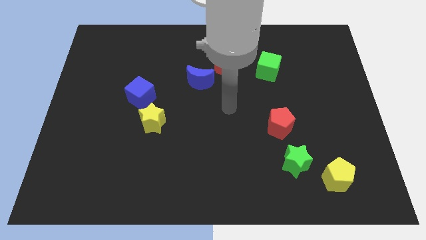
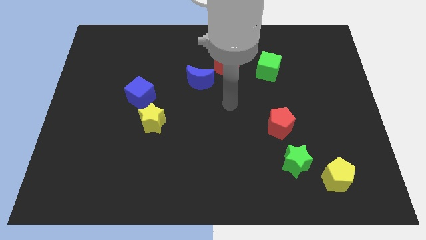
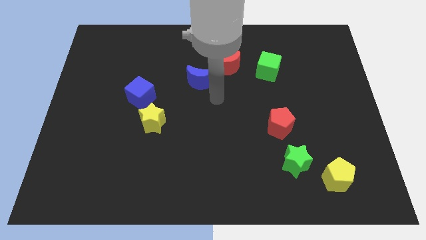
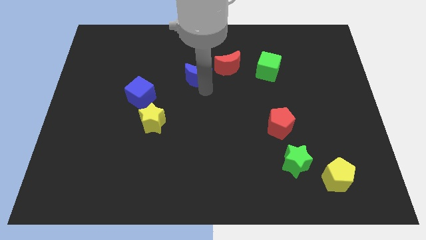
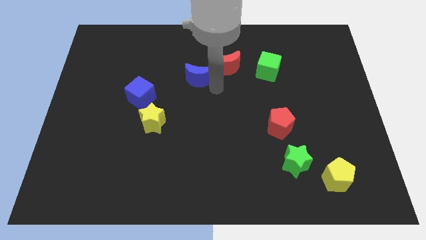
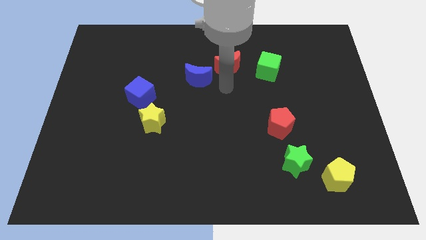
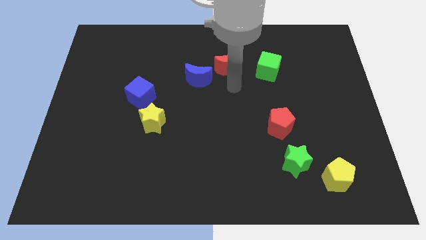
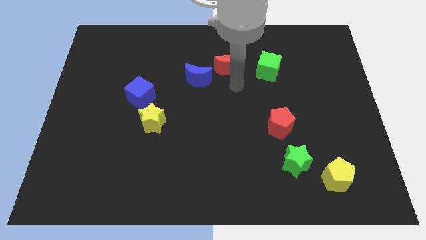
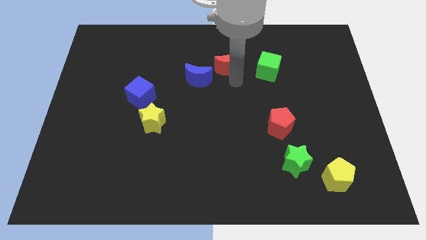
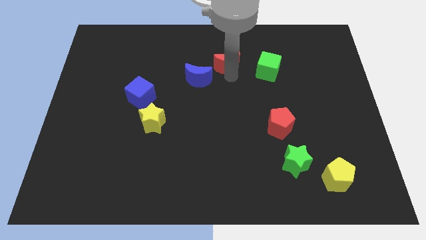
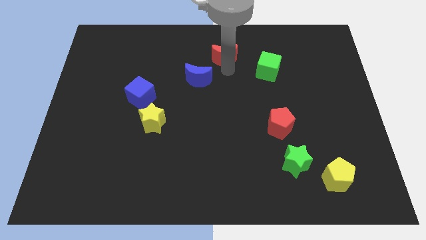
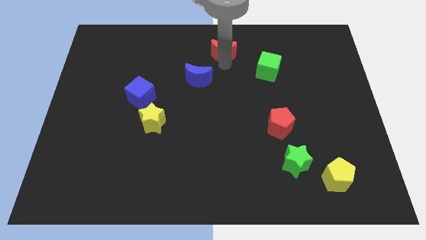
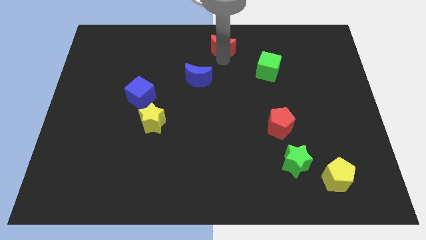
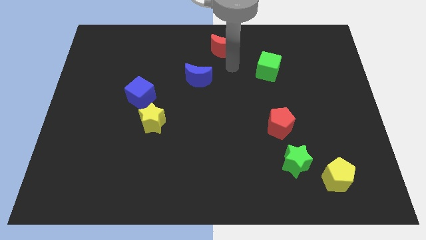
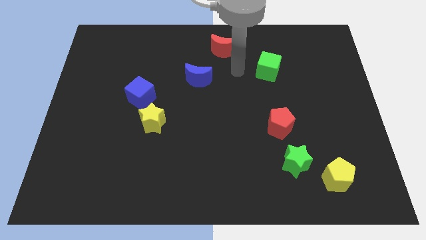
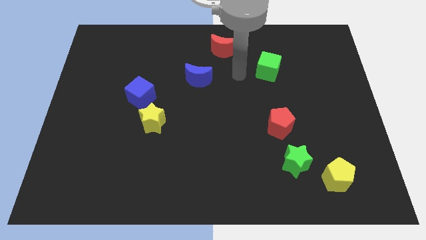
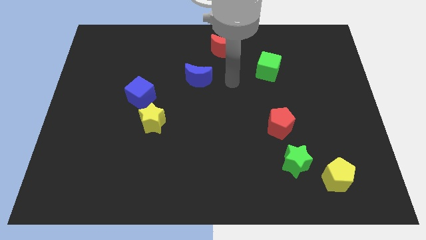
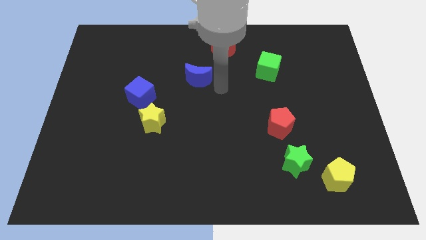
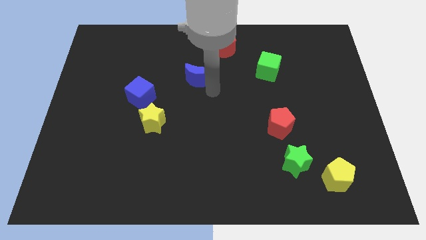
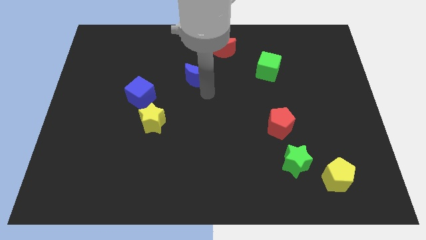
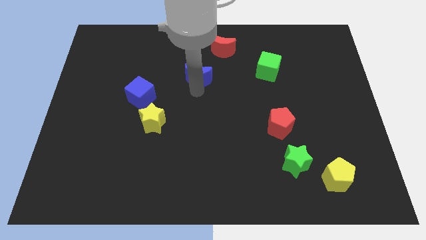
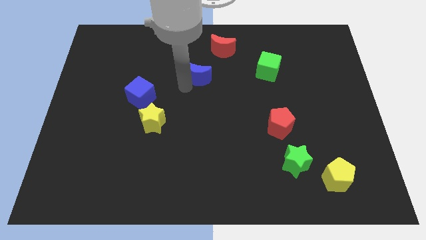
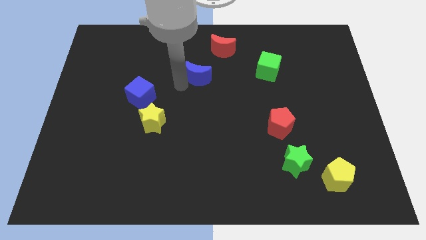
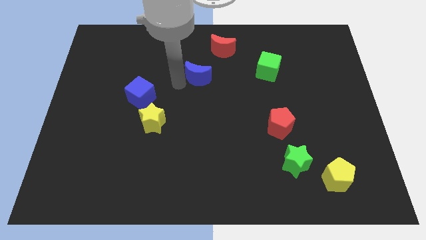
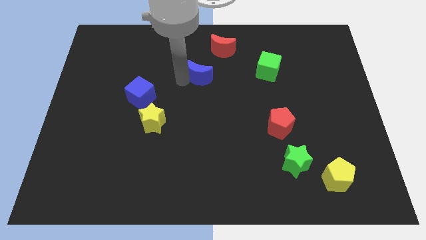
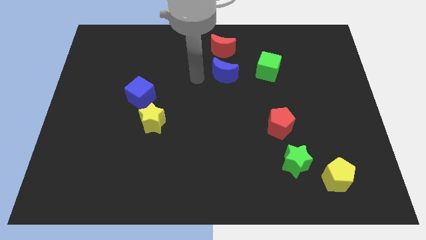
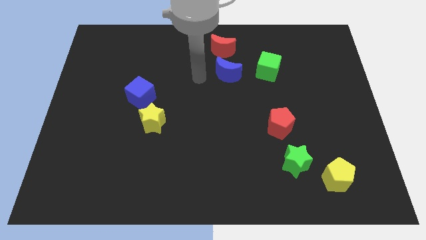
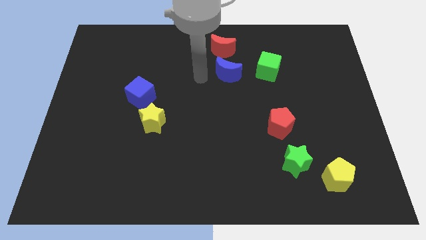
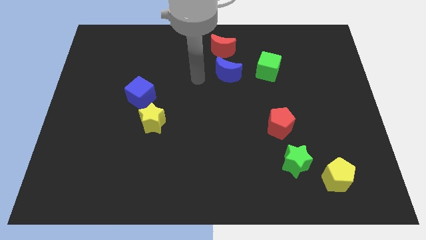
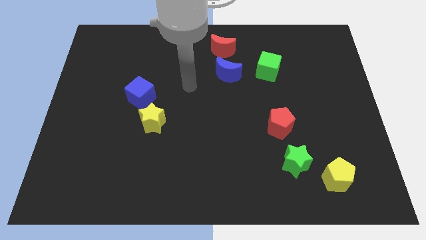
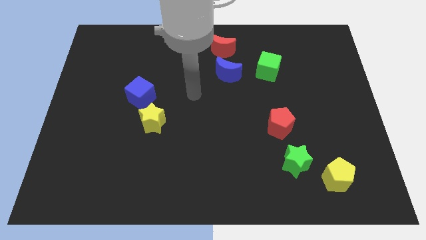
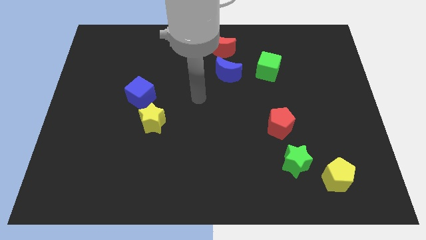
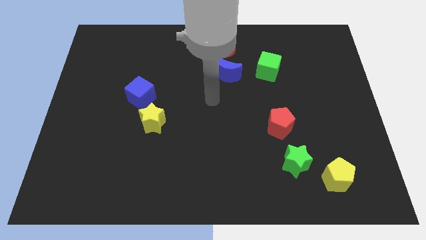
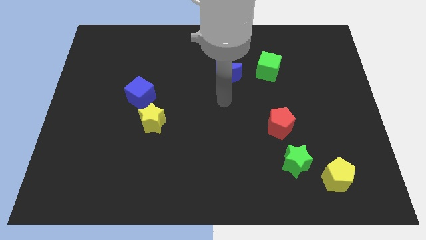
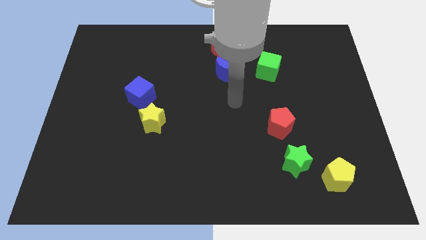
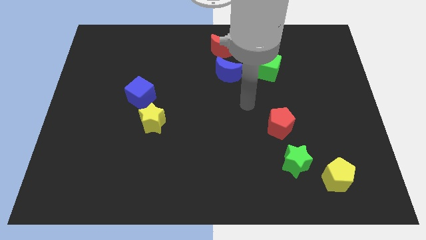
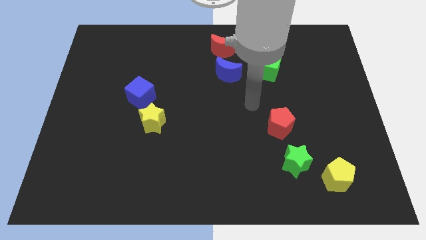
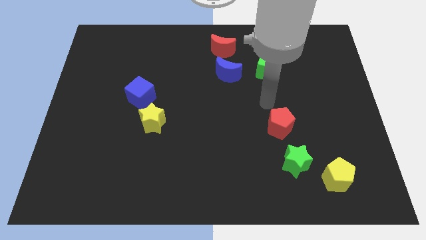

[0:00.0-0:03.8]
place the blue moon left to the green cube

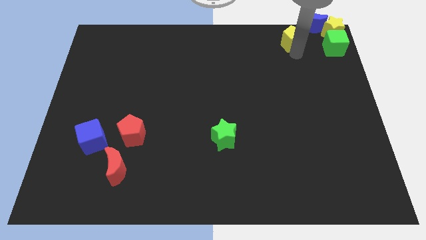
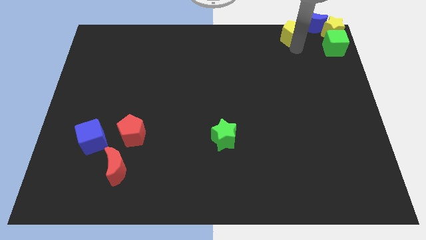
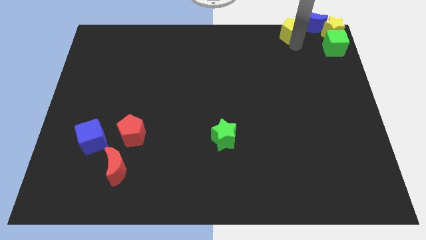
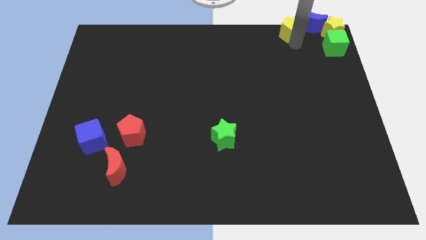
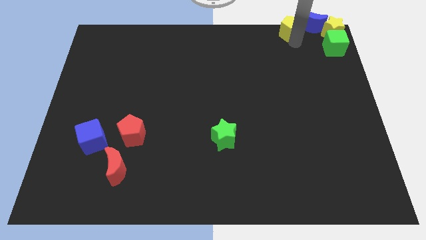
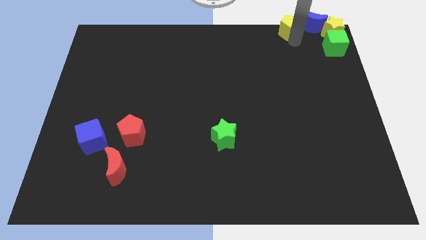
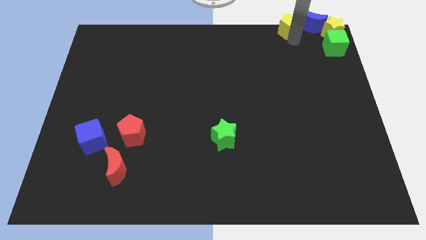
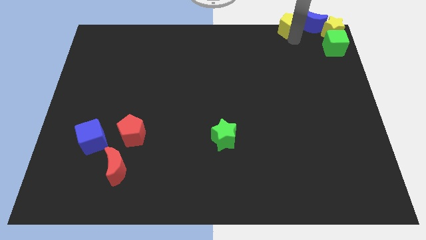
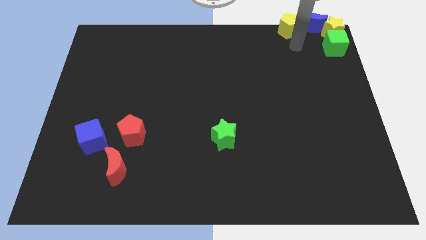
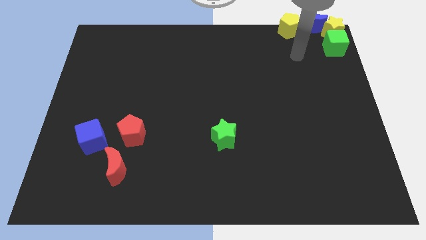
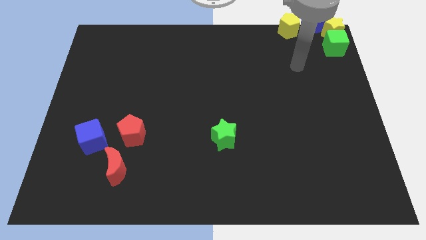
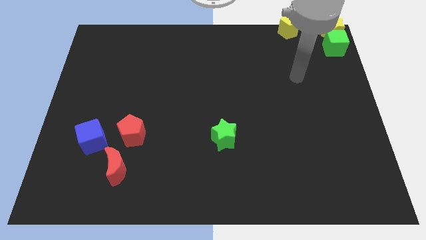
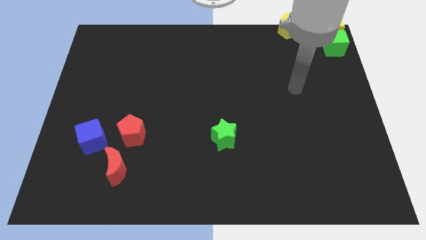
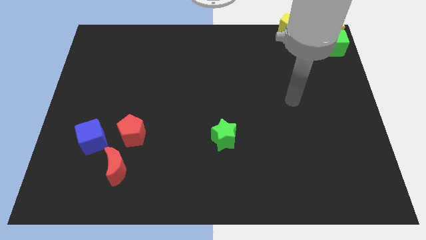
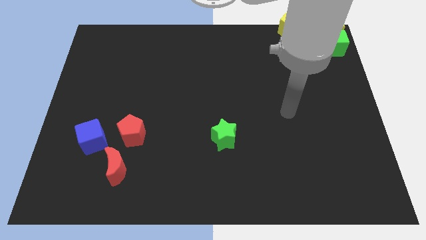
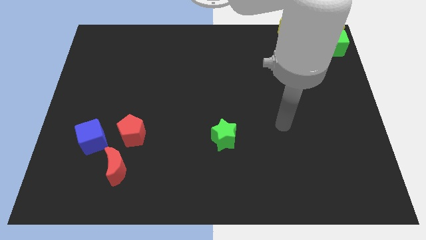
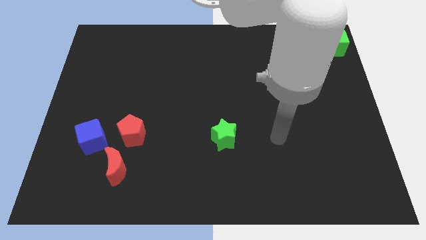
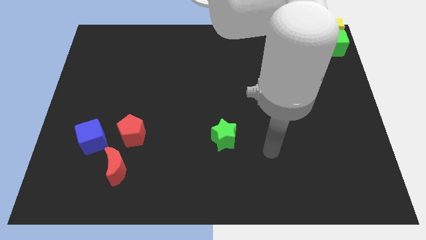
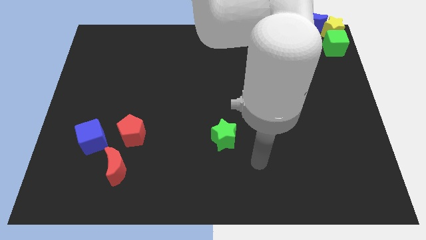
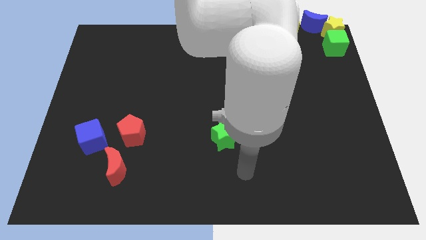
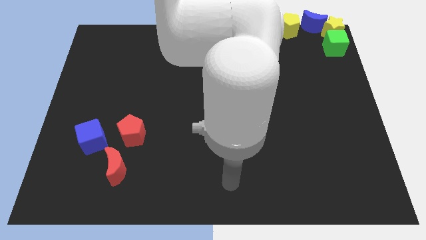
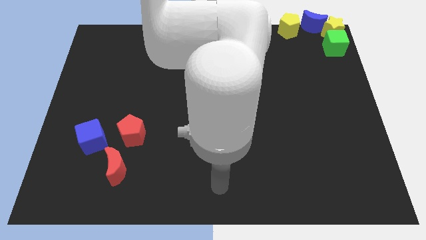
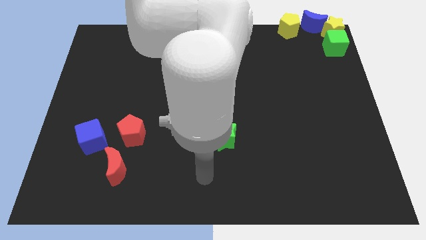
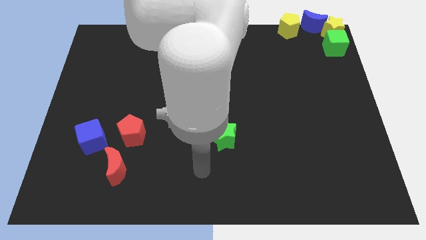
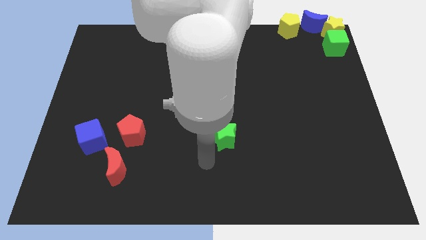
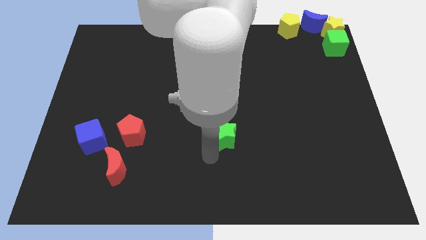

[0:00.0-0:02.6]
move yellow pentagon left beside the blue moon

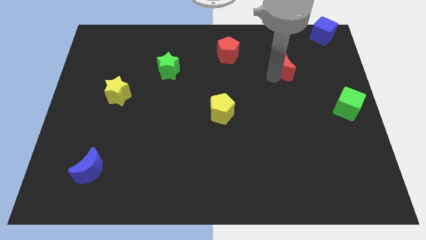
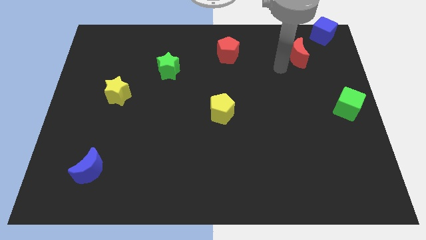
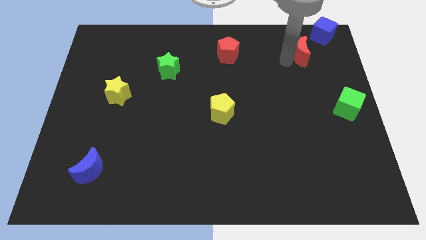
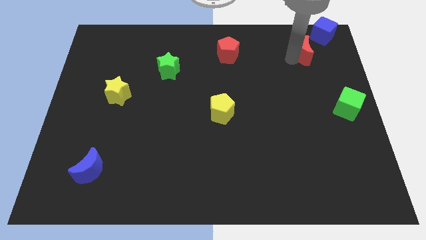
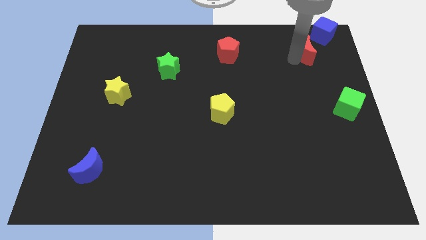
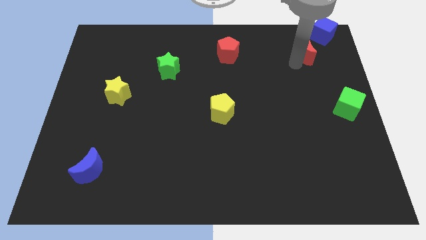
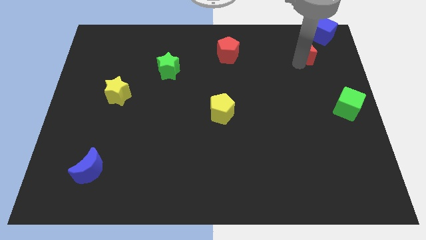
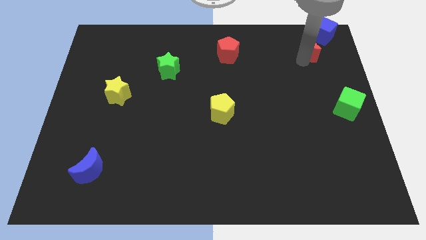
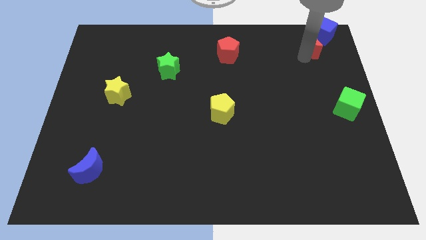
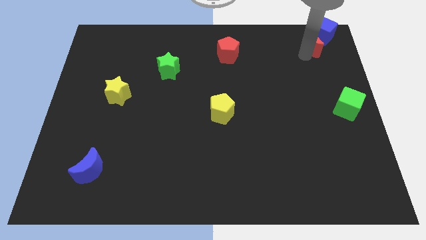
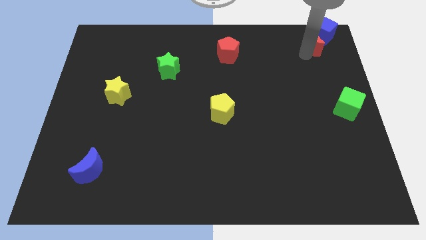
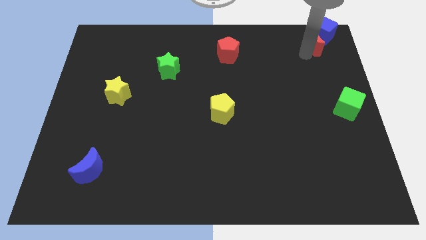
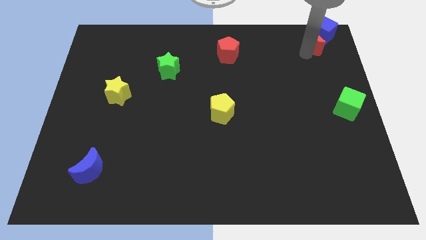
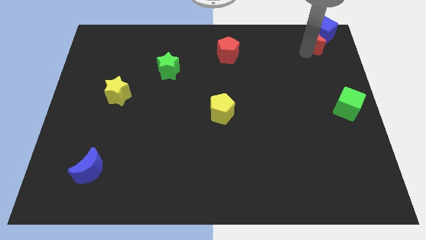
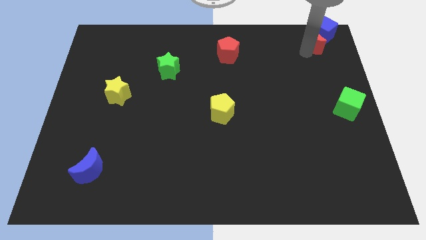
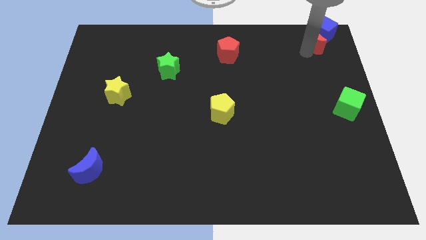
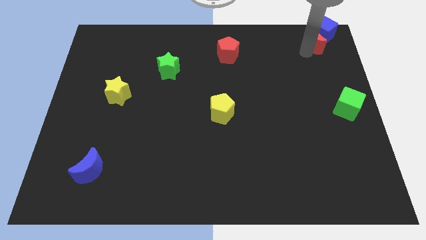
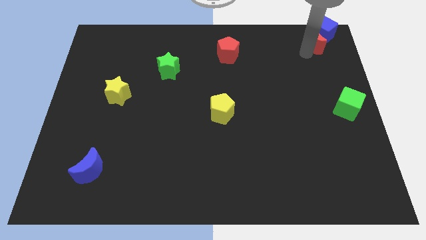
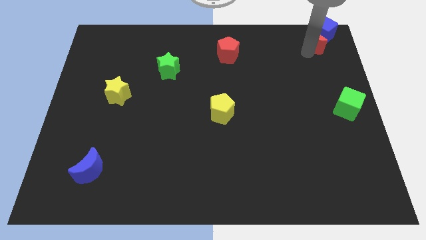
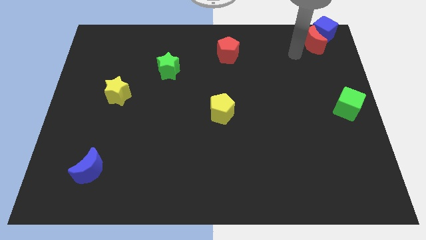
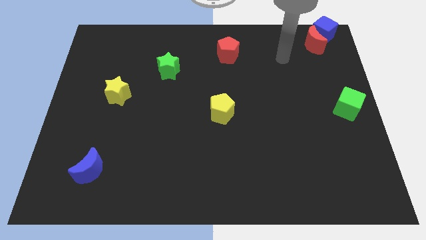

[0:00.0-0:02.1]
move the red crescent to the top right

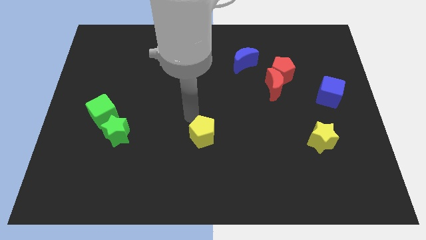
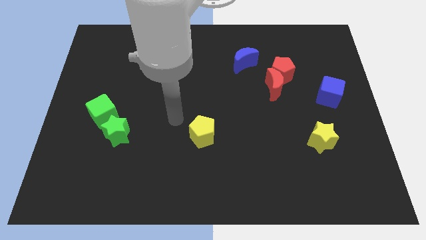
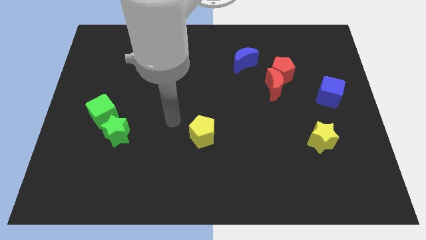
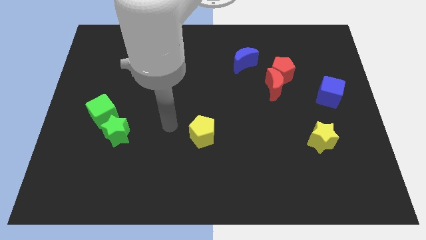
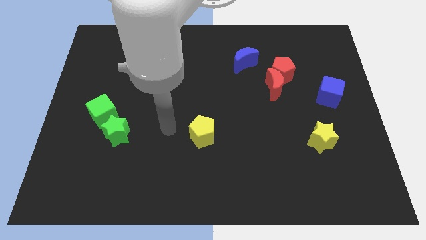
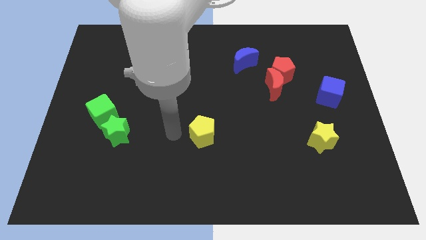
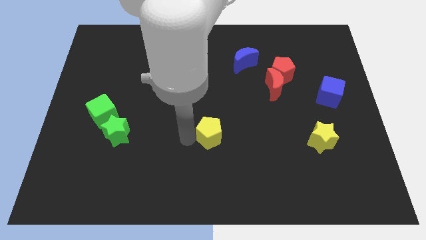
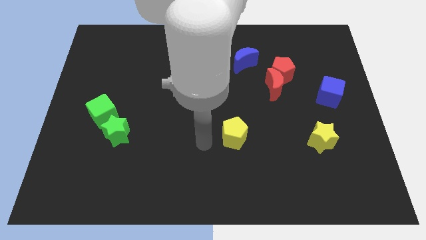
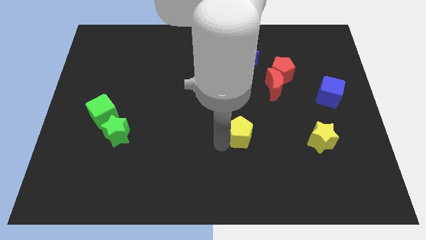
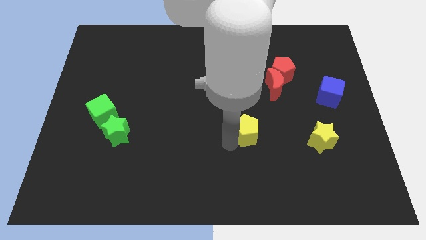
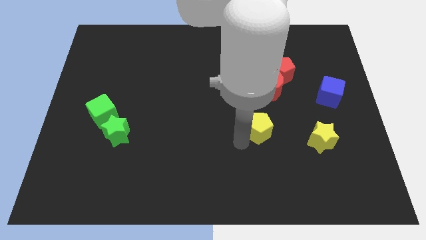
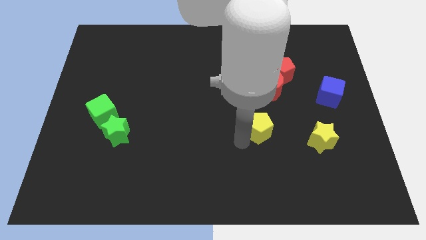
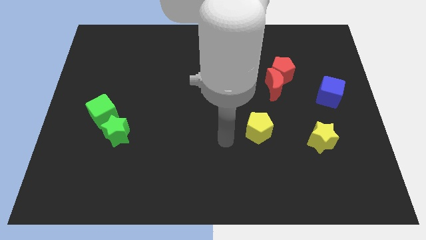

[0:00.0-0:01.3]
move the yellow pentagon diagonal to the blue cube
